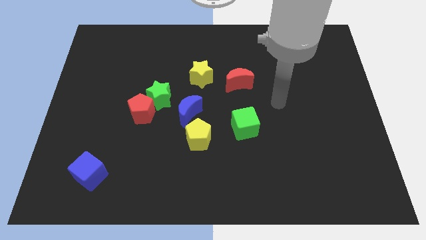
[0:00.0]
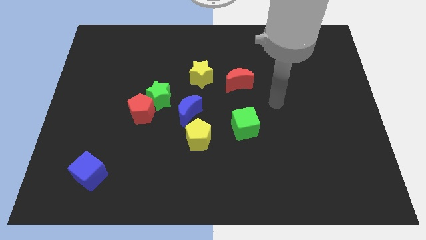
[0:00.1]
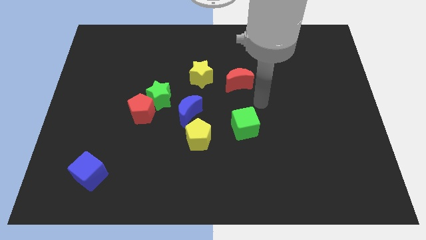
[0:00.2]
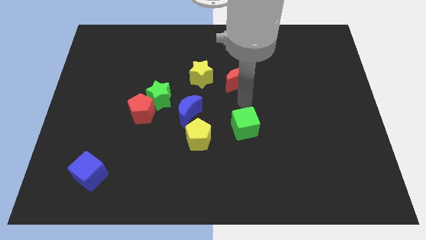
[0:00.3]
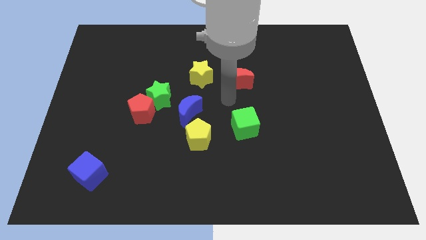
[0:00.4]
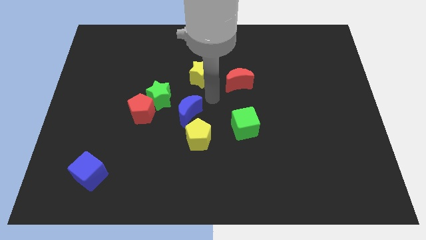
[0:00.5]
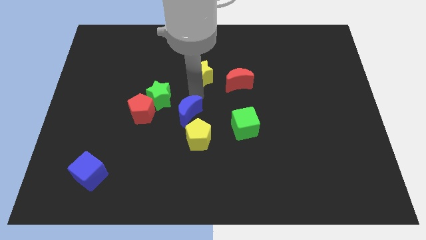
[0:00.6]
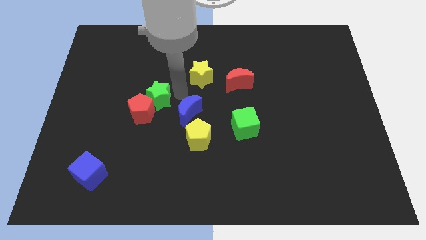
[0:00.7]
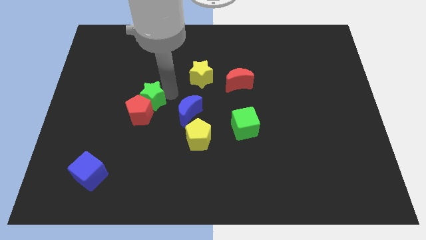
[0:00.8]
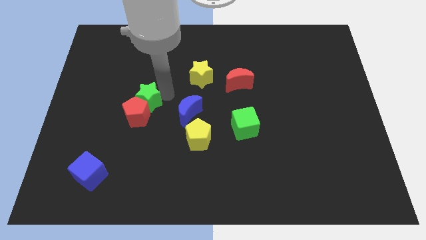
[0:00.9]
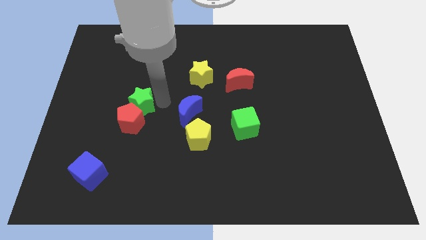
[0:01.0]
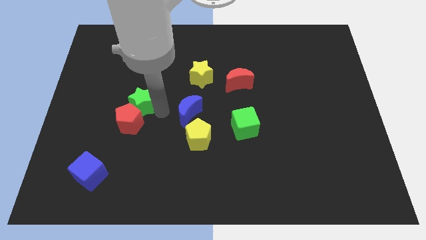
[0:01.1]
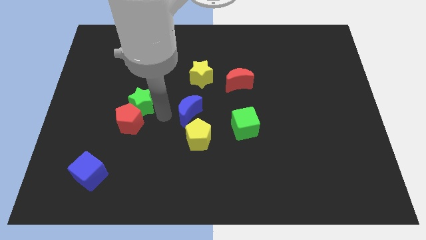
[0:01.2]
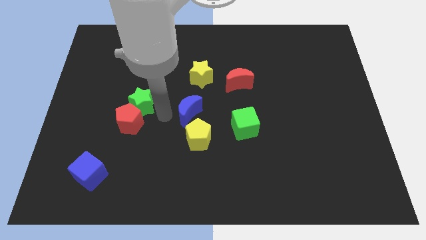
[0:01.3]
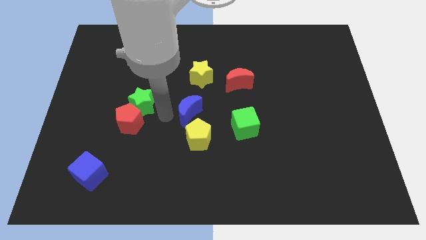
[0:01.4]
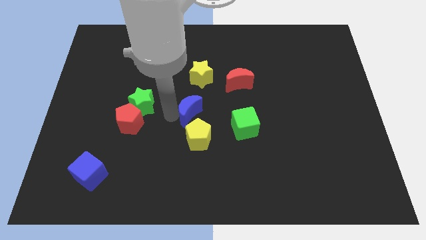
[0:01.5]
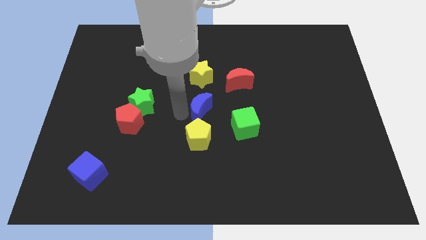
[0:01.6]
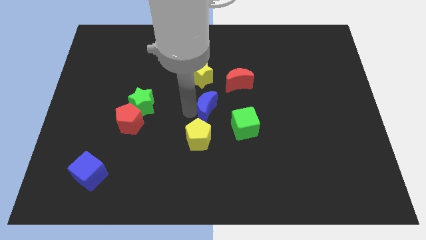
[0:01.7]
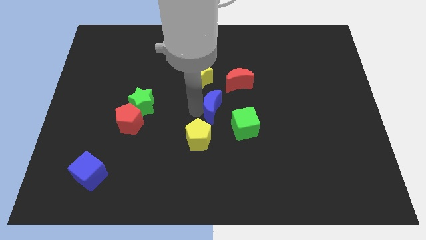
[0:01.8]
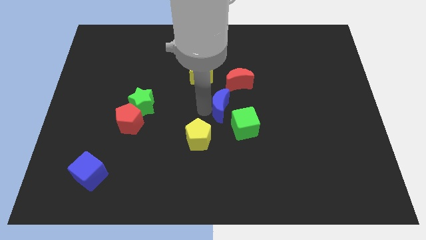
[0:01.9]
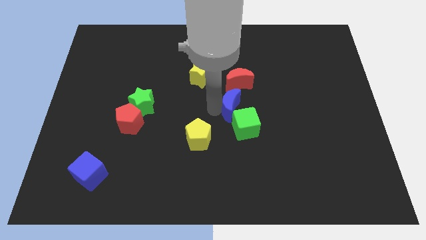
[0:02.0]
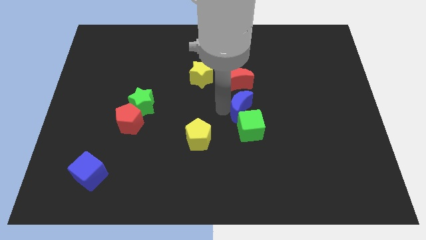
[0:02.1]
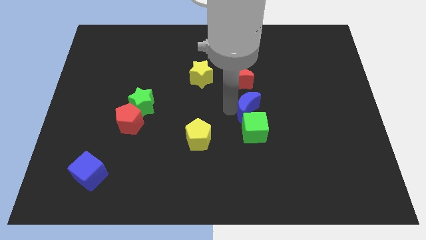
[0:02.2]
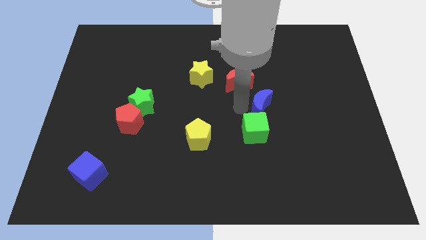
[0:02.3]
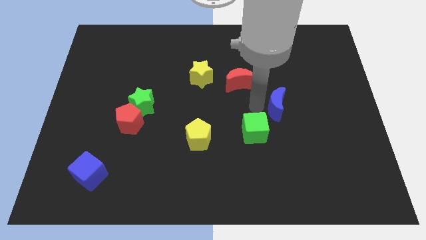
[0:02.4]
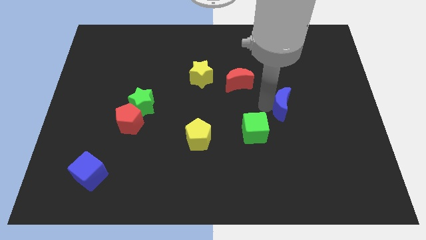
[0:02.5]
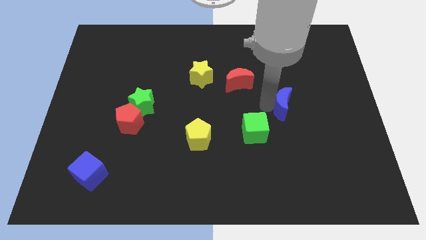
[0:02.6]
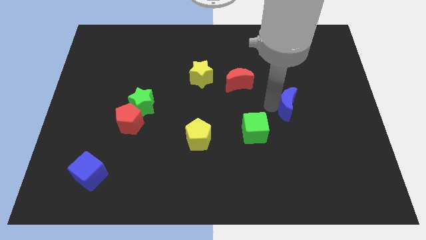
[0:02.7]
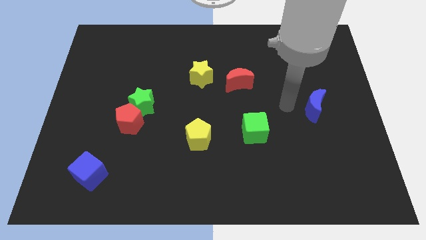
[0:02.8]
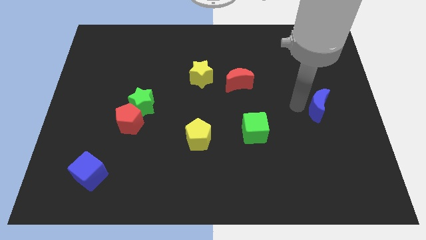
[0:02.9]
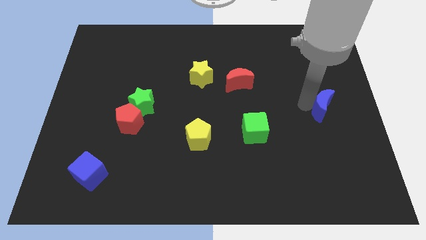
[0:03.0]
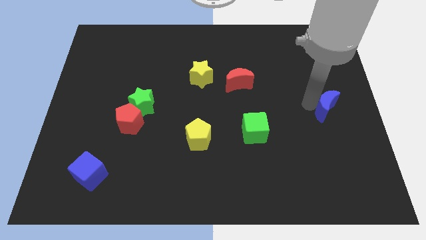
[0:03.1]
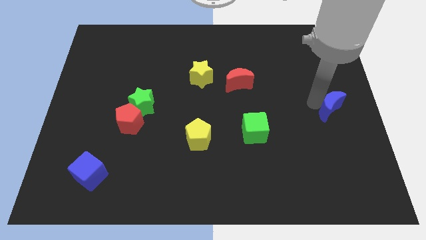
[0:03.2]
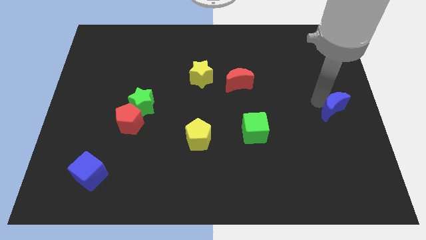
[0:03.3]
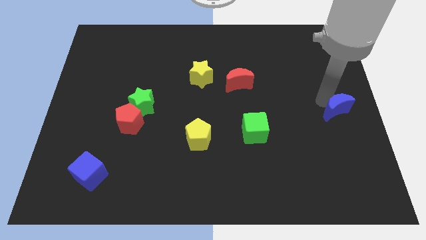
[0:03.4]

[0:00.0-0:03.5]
push blue moon to the right center of the board

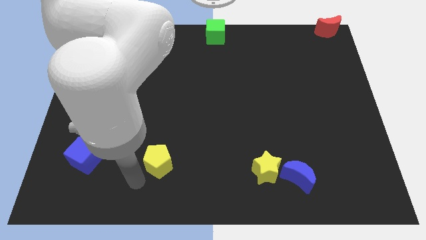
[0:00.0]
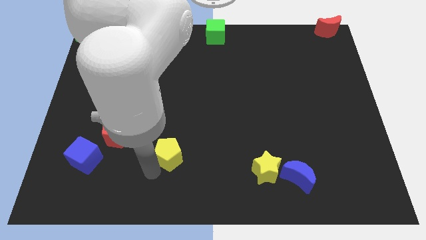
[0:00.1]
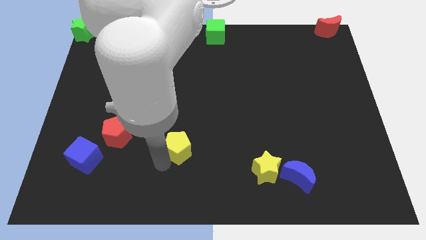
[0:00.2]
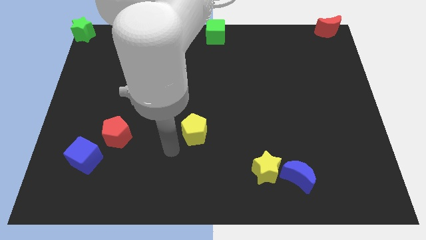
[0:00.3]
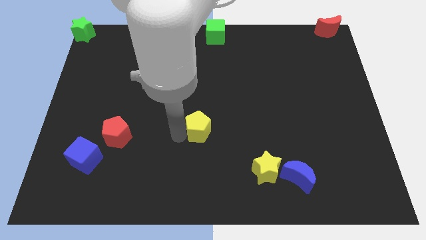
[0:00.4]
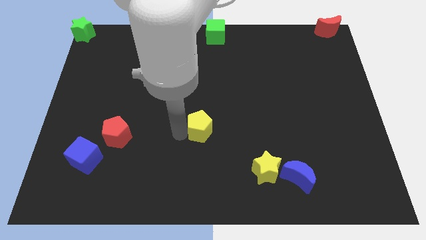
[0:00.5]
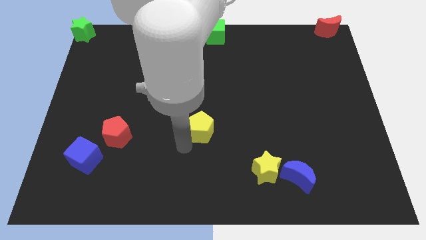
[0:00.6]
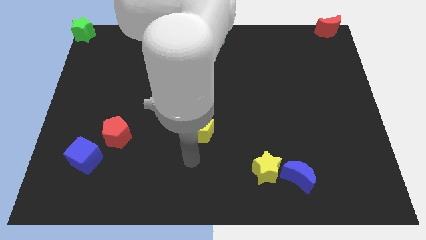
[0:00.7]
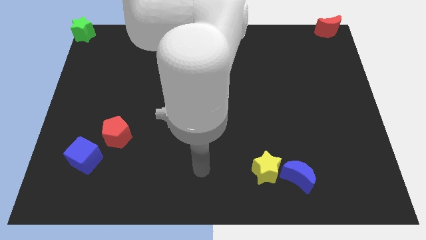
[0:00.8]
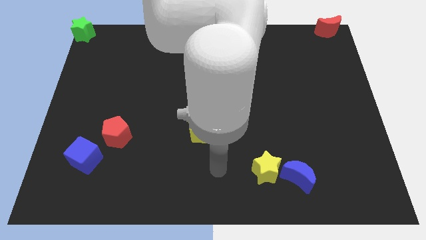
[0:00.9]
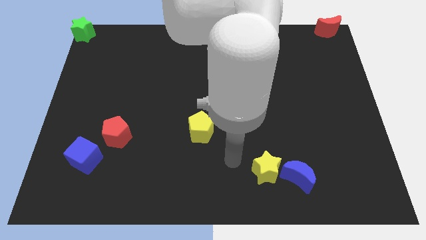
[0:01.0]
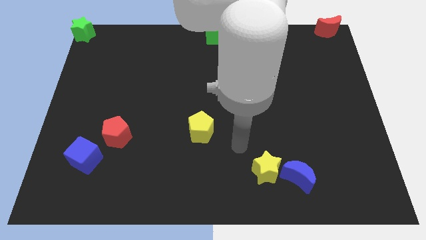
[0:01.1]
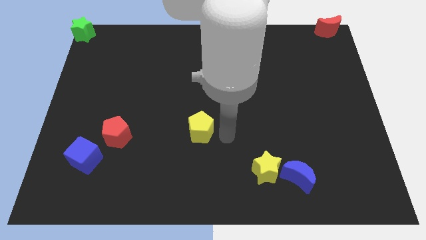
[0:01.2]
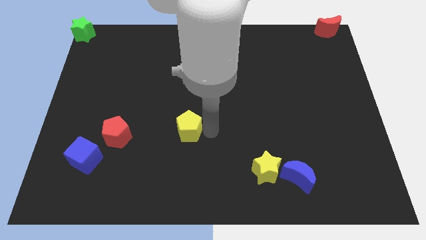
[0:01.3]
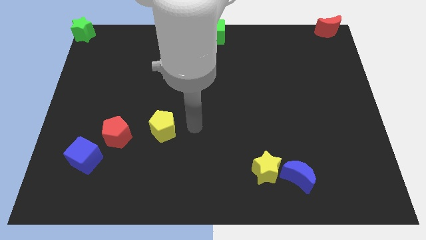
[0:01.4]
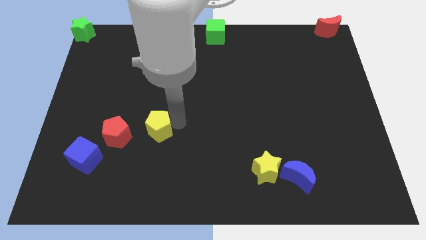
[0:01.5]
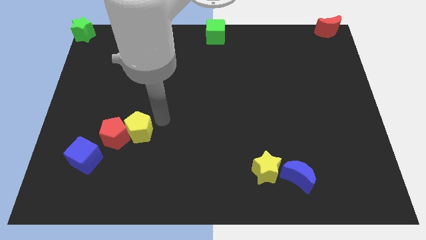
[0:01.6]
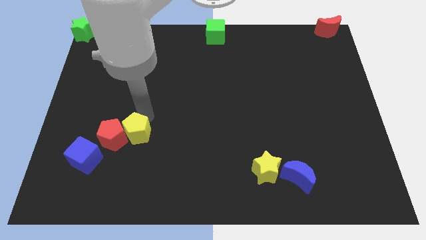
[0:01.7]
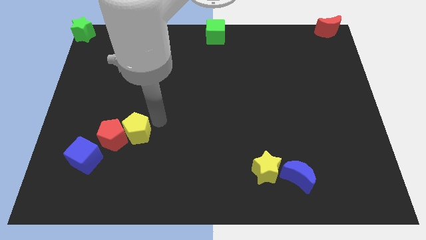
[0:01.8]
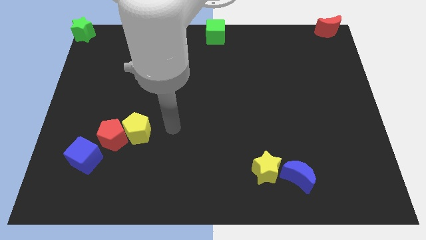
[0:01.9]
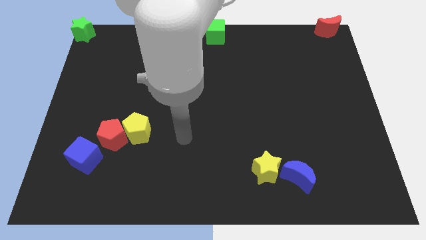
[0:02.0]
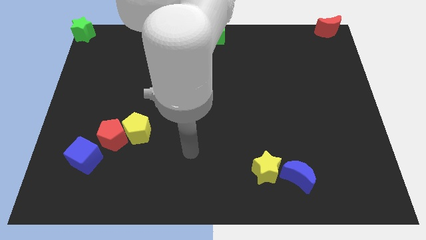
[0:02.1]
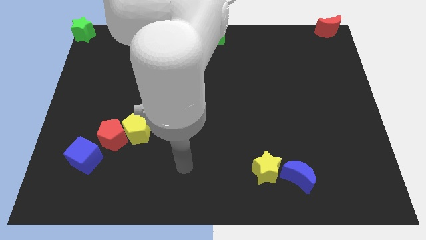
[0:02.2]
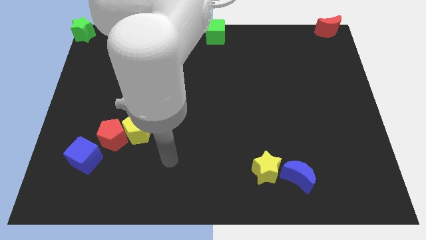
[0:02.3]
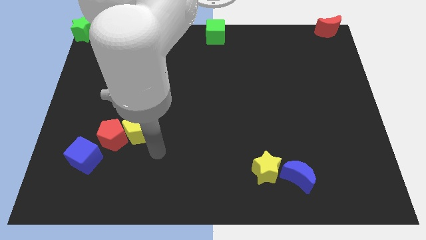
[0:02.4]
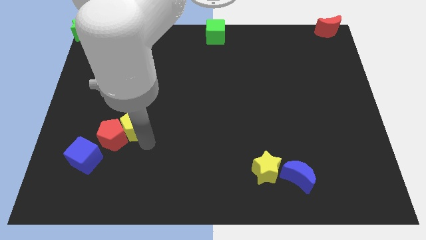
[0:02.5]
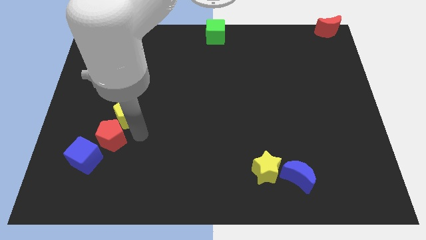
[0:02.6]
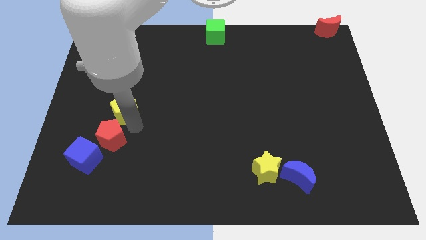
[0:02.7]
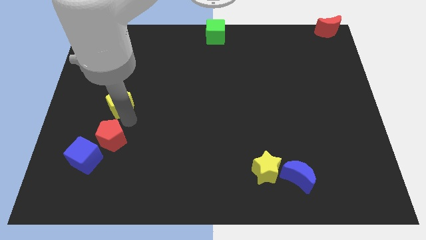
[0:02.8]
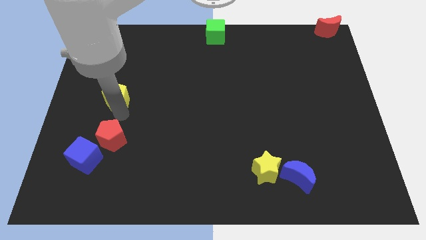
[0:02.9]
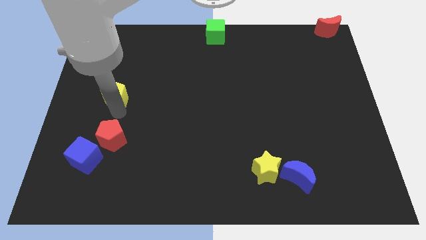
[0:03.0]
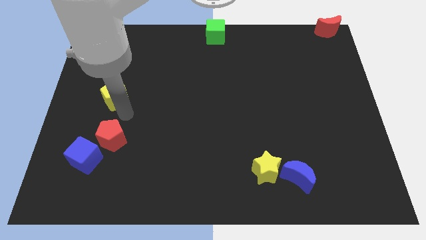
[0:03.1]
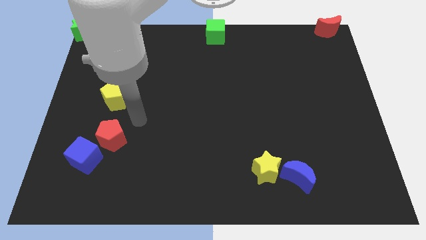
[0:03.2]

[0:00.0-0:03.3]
place yellow pentagon to the top of red pentagon

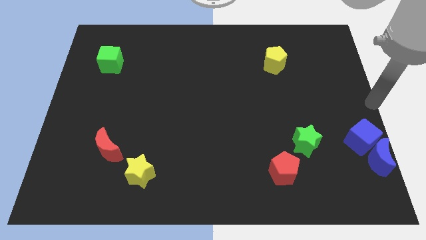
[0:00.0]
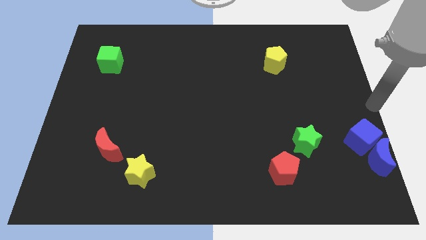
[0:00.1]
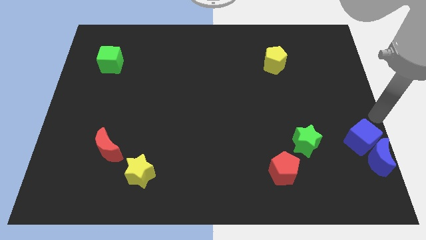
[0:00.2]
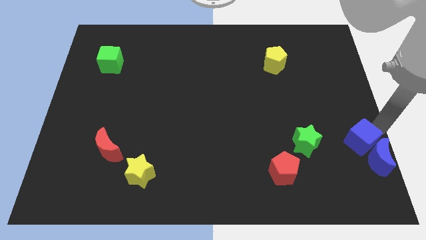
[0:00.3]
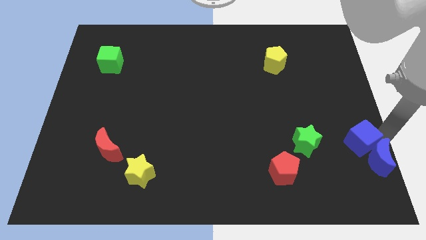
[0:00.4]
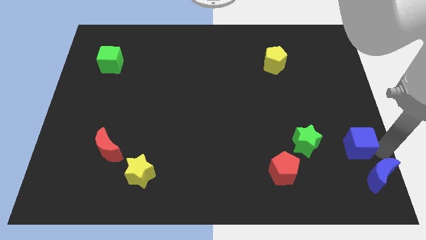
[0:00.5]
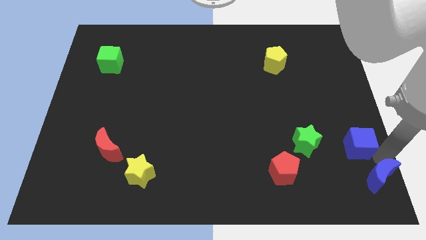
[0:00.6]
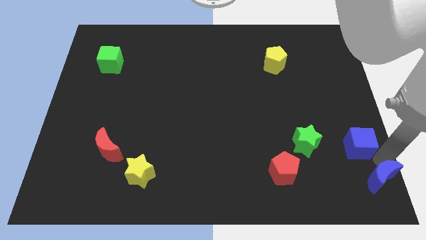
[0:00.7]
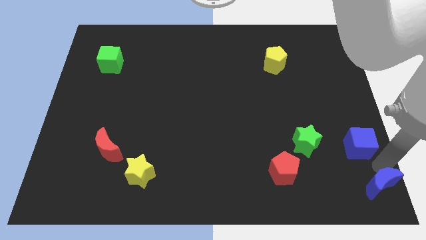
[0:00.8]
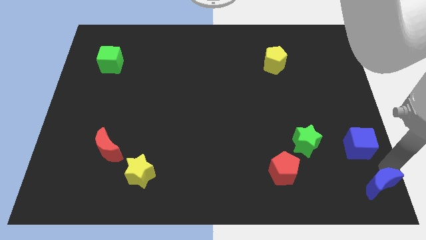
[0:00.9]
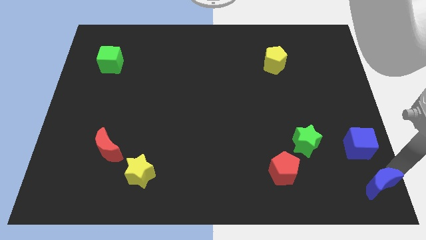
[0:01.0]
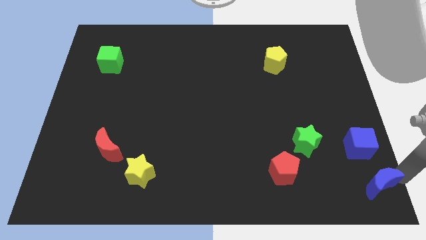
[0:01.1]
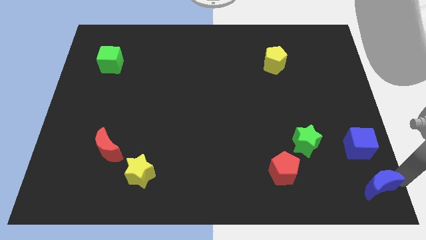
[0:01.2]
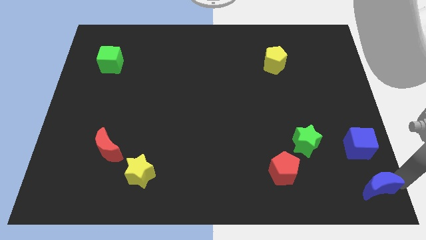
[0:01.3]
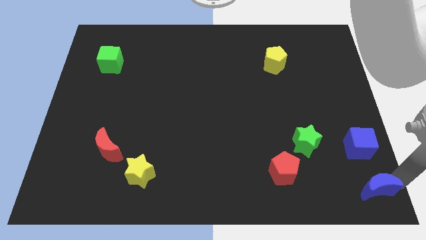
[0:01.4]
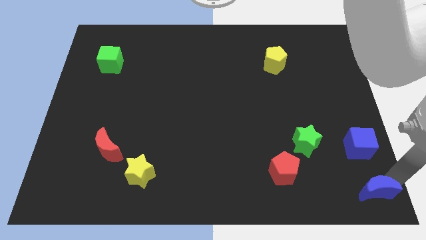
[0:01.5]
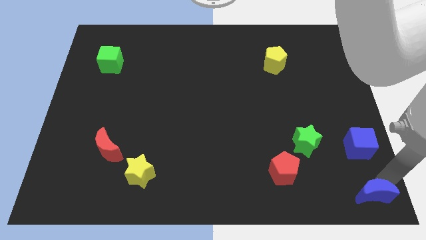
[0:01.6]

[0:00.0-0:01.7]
separate blue moon from blue cube

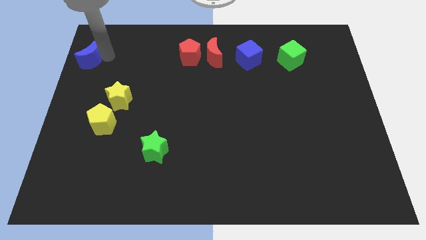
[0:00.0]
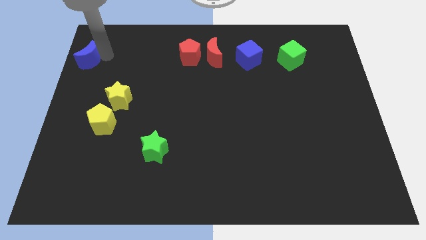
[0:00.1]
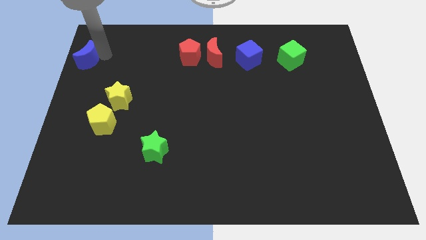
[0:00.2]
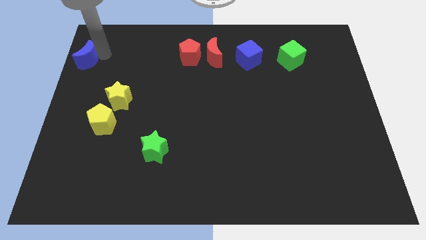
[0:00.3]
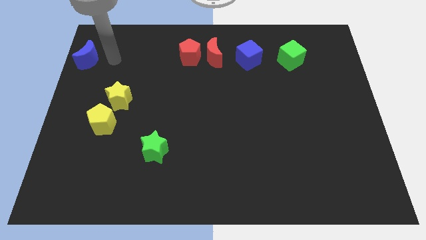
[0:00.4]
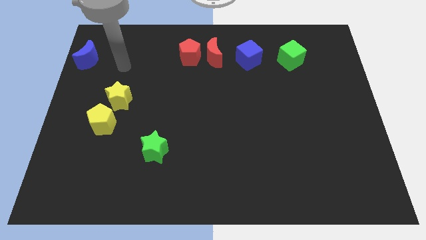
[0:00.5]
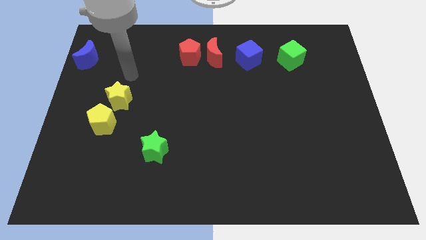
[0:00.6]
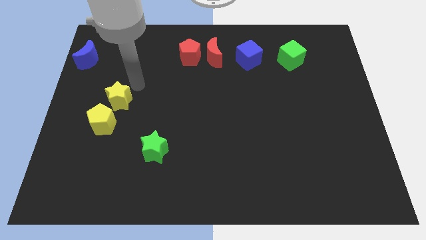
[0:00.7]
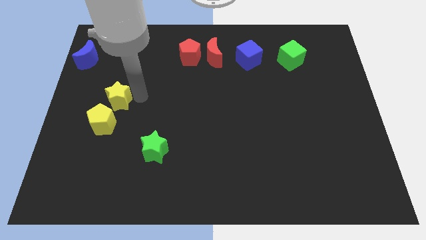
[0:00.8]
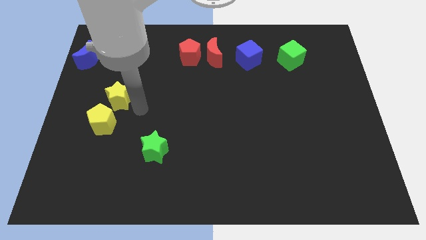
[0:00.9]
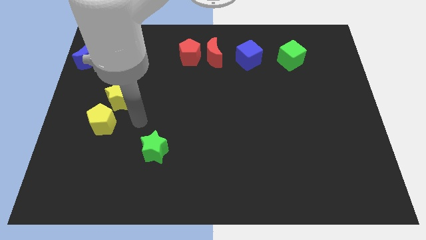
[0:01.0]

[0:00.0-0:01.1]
put your hand in between the yellow and green star
